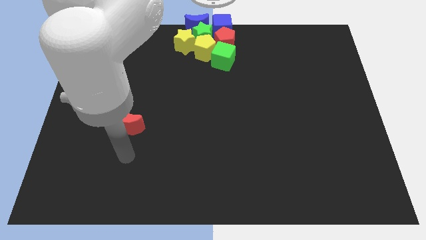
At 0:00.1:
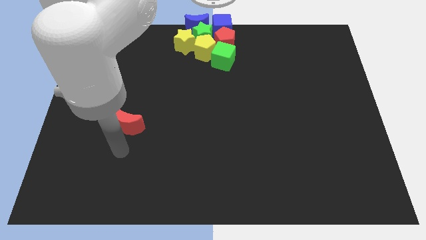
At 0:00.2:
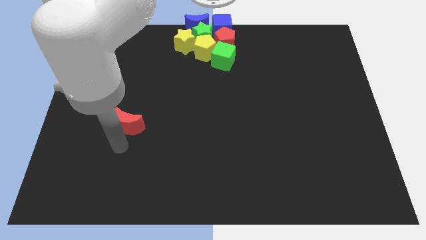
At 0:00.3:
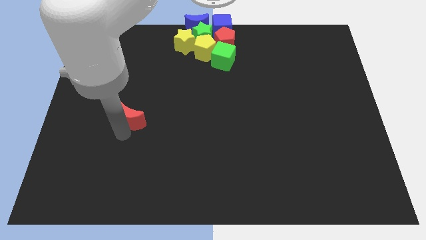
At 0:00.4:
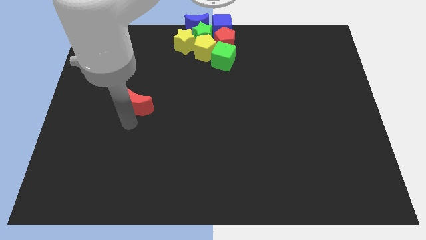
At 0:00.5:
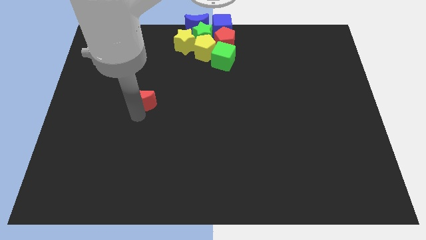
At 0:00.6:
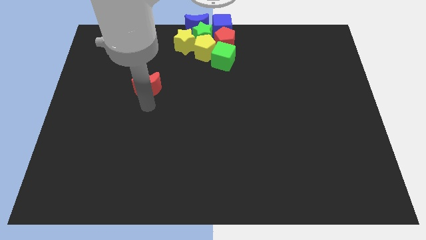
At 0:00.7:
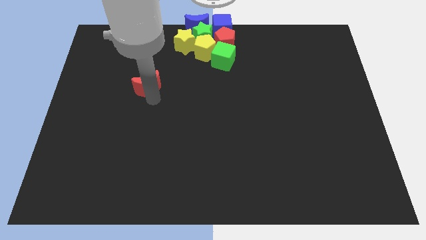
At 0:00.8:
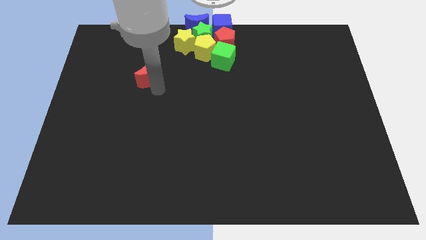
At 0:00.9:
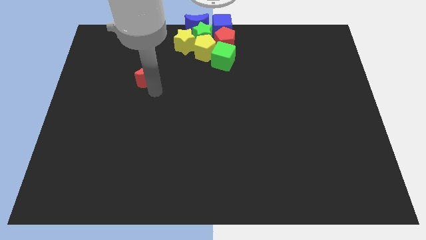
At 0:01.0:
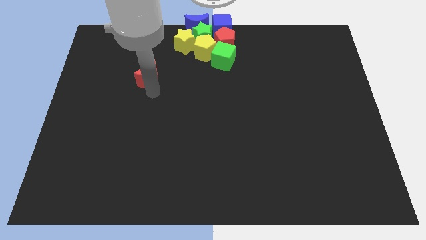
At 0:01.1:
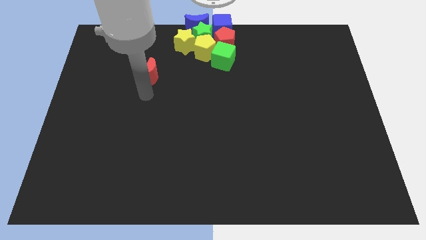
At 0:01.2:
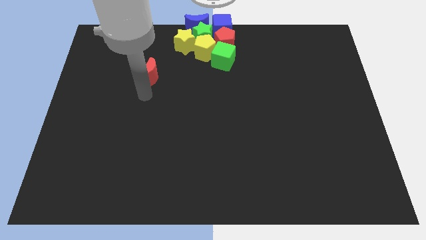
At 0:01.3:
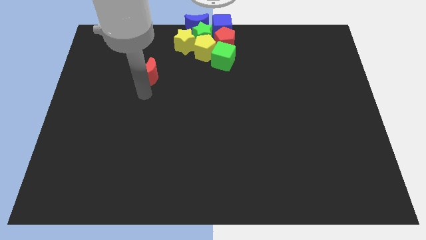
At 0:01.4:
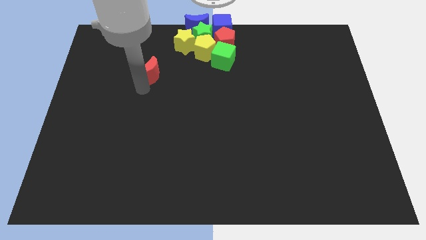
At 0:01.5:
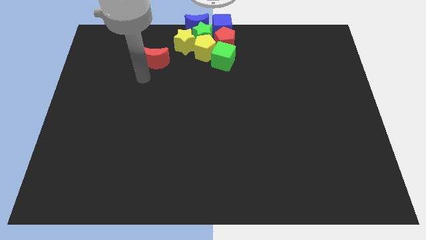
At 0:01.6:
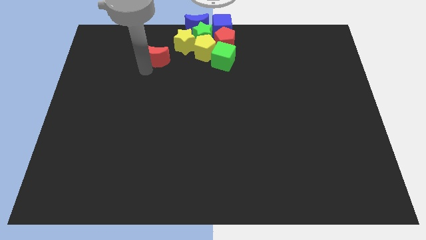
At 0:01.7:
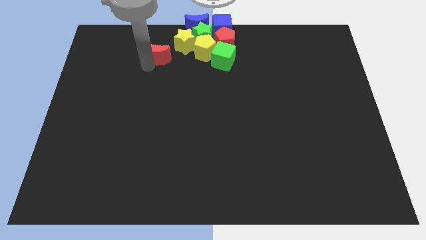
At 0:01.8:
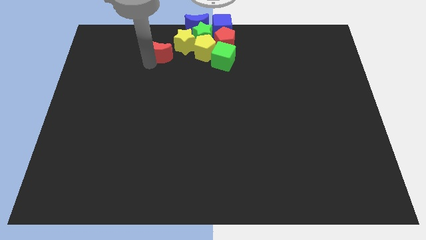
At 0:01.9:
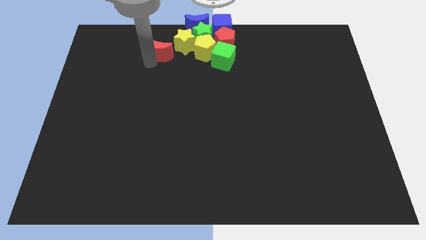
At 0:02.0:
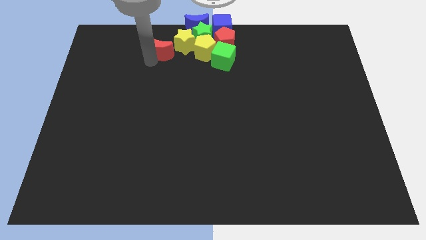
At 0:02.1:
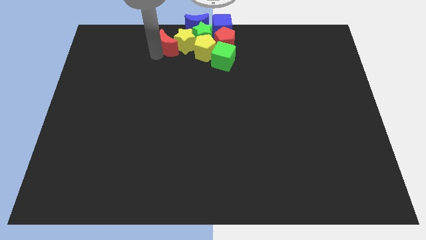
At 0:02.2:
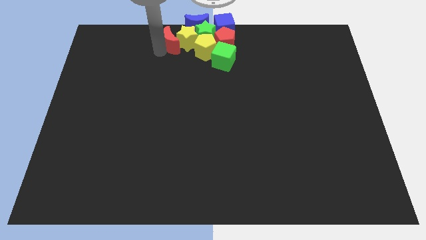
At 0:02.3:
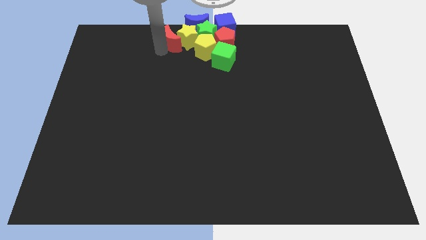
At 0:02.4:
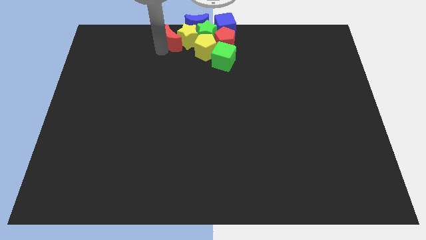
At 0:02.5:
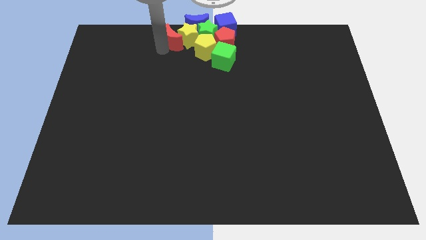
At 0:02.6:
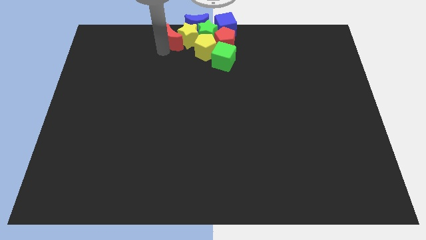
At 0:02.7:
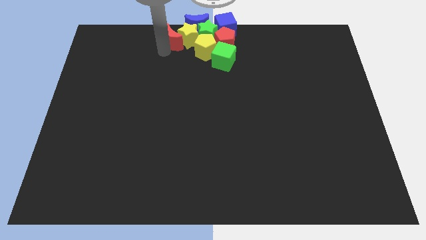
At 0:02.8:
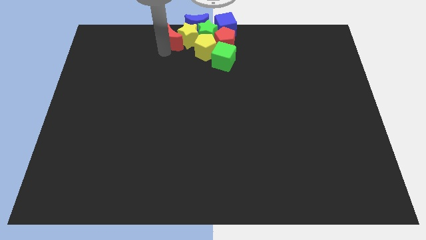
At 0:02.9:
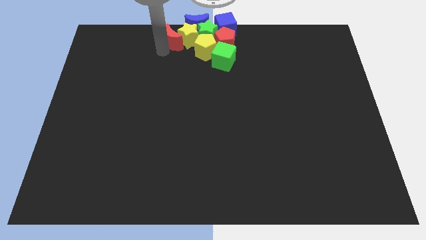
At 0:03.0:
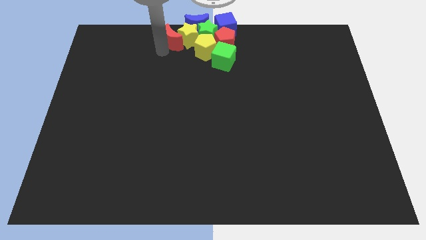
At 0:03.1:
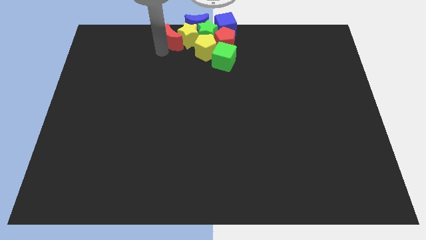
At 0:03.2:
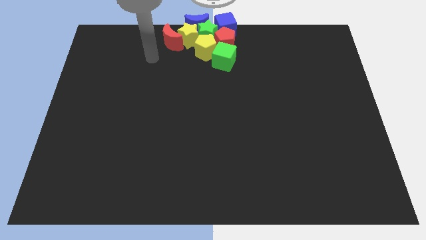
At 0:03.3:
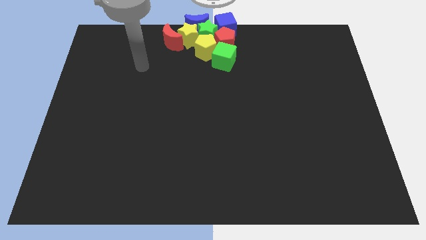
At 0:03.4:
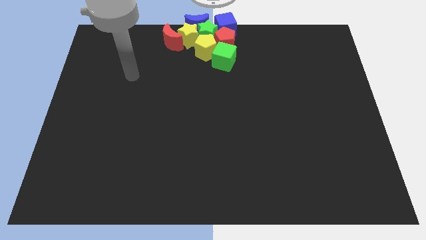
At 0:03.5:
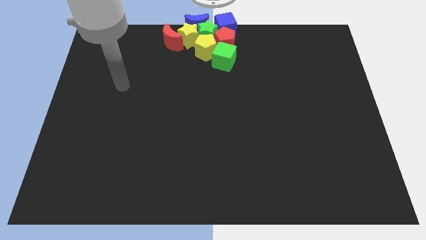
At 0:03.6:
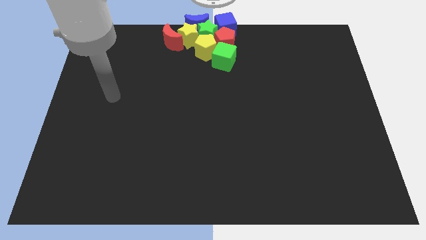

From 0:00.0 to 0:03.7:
slide the red moon into the left side of the yellow star

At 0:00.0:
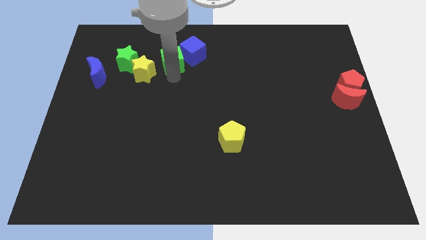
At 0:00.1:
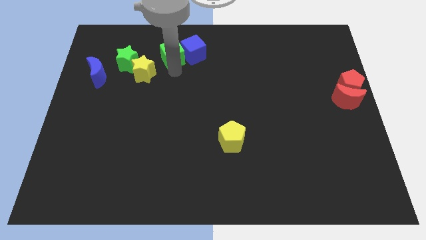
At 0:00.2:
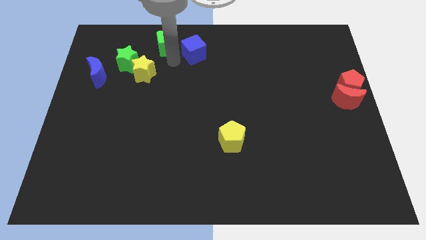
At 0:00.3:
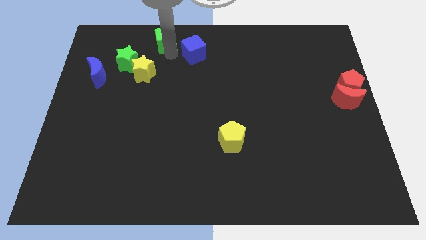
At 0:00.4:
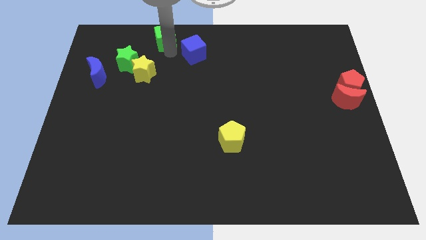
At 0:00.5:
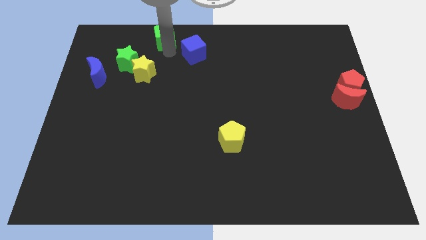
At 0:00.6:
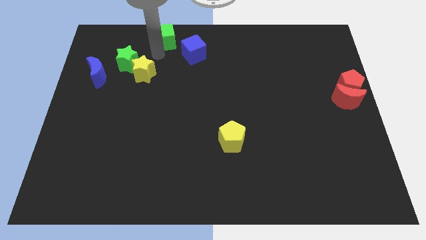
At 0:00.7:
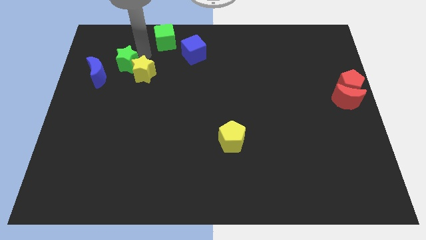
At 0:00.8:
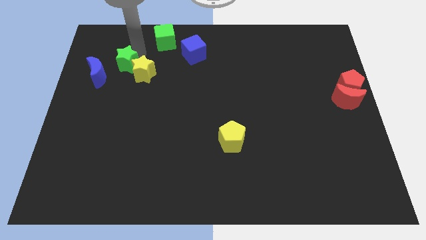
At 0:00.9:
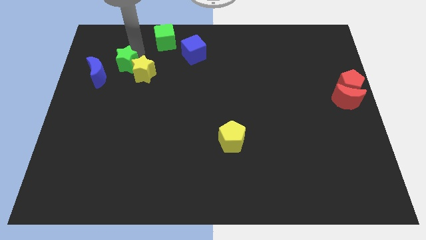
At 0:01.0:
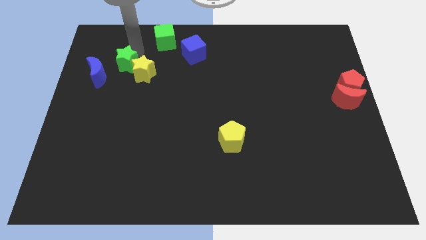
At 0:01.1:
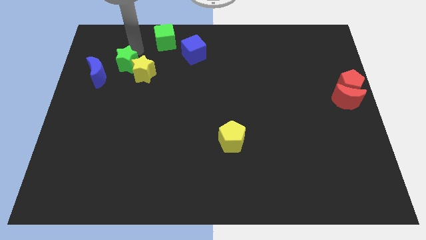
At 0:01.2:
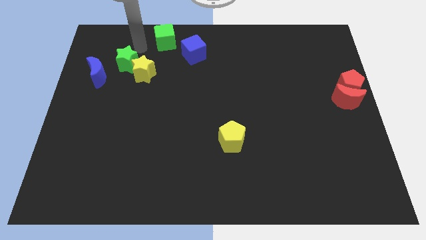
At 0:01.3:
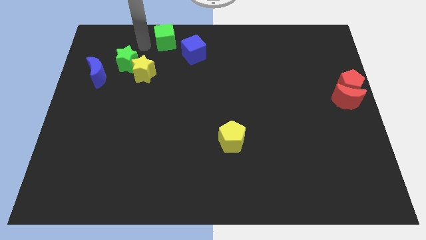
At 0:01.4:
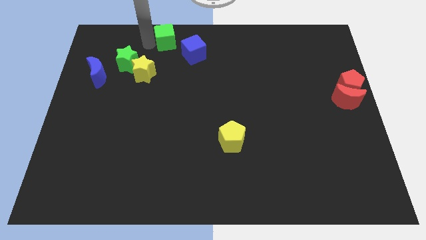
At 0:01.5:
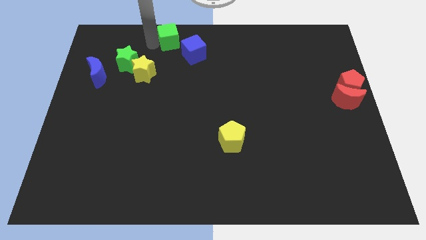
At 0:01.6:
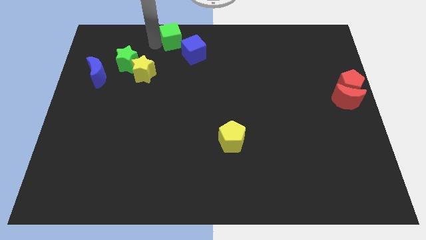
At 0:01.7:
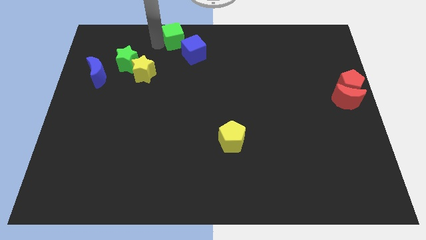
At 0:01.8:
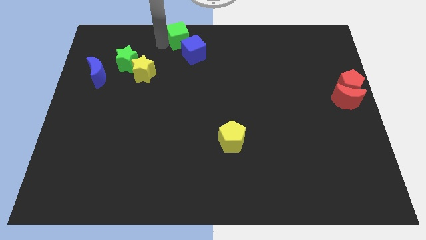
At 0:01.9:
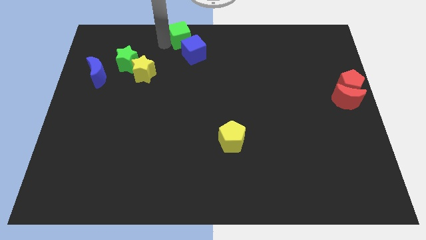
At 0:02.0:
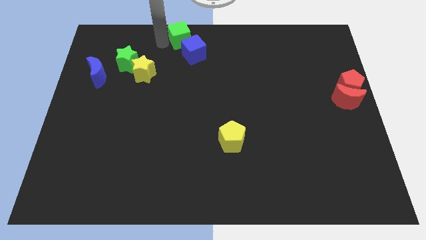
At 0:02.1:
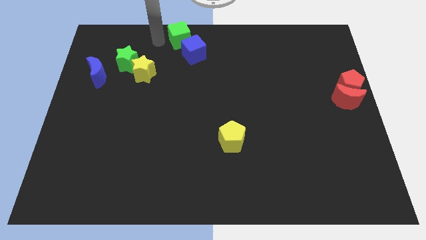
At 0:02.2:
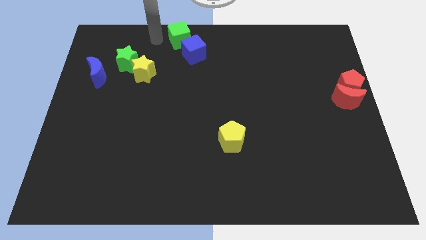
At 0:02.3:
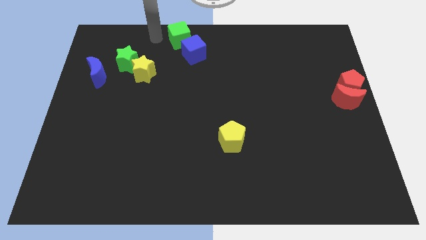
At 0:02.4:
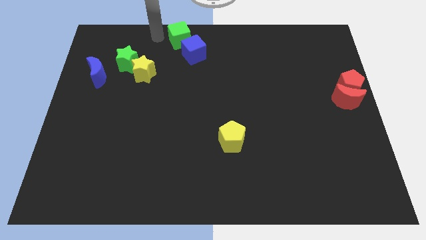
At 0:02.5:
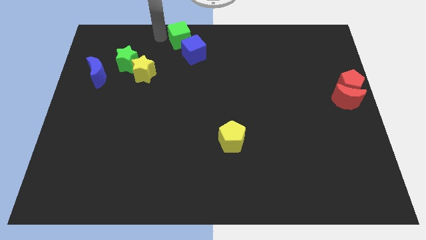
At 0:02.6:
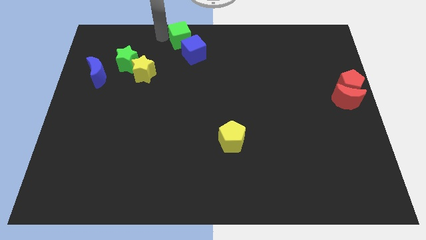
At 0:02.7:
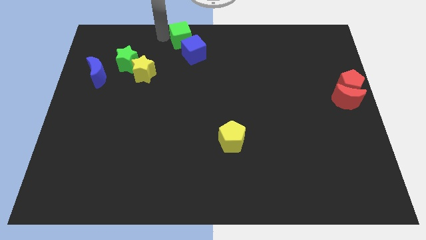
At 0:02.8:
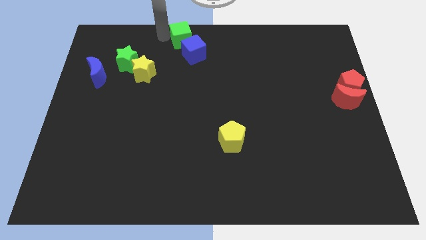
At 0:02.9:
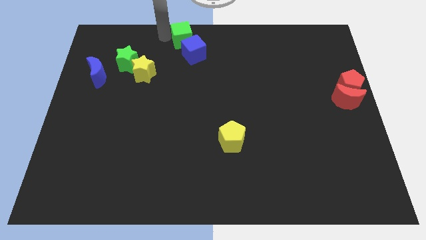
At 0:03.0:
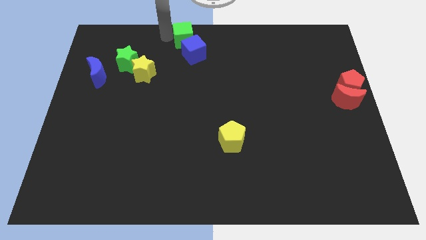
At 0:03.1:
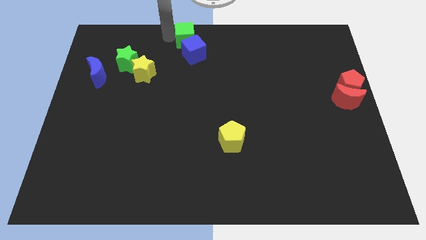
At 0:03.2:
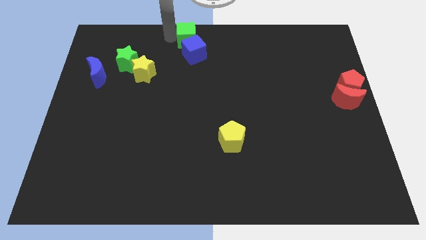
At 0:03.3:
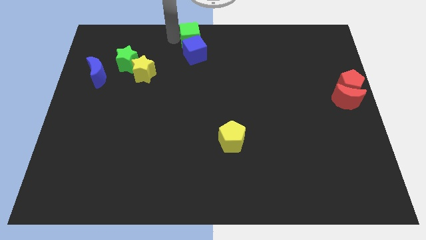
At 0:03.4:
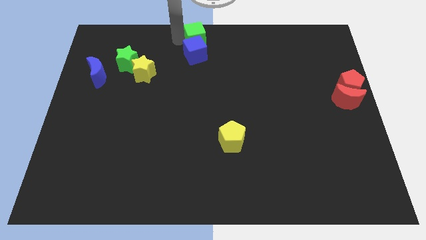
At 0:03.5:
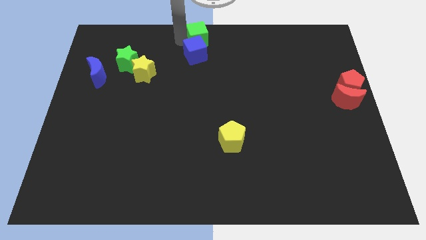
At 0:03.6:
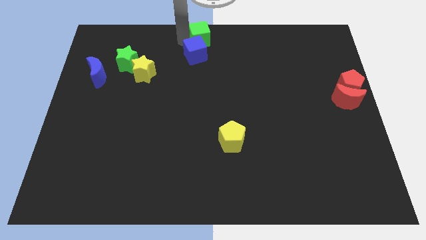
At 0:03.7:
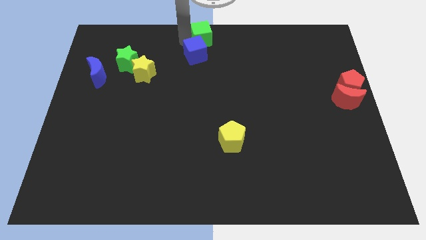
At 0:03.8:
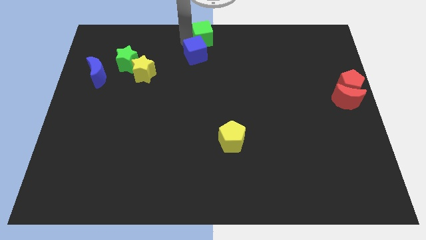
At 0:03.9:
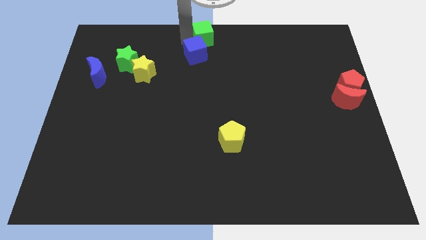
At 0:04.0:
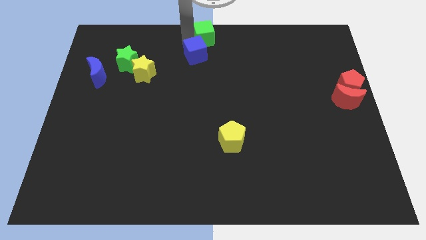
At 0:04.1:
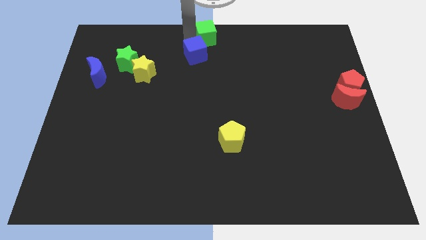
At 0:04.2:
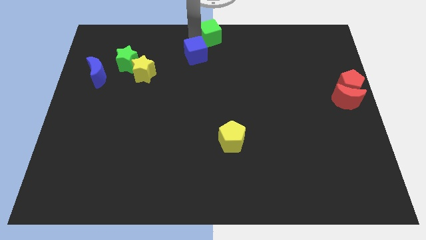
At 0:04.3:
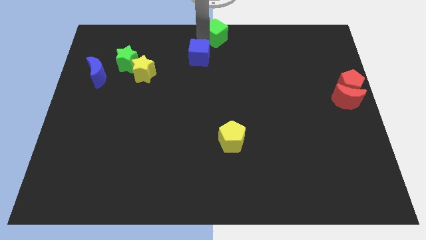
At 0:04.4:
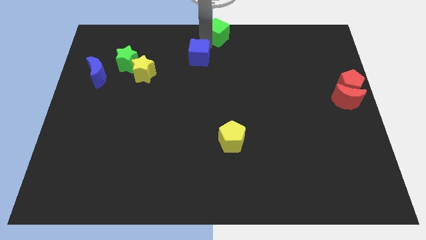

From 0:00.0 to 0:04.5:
place the green cube at the top center of the board

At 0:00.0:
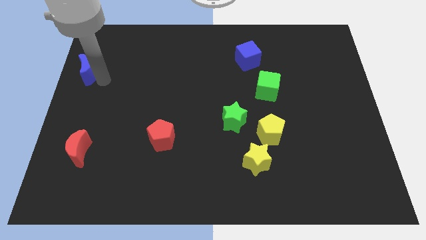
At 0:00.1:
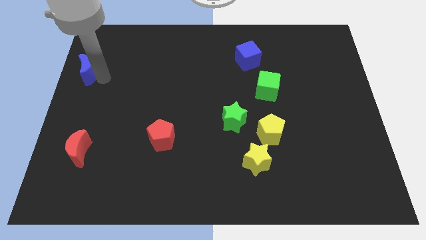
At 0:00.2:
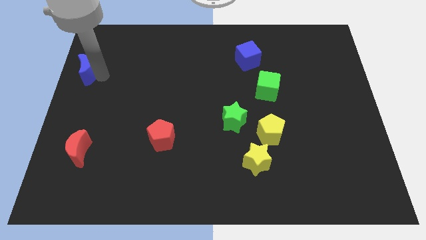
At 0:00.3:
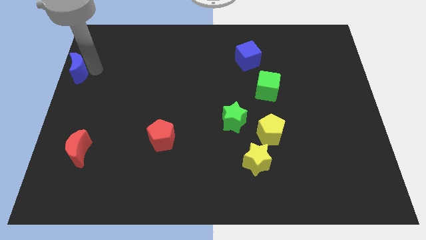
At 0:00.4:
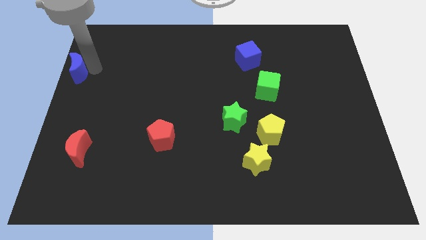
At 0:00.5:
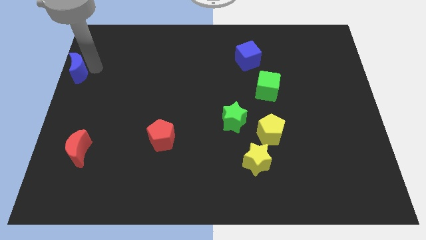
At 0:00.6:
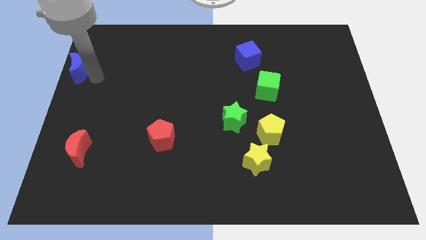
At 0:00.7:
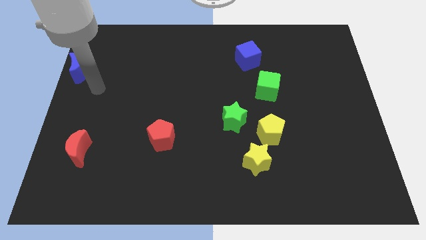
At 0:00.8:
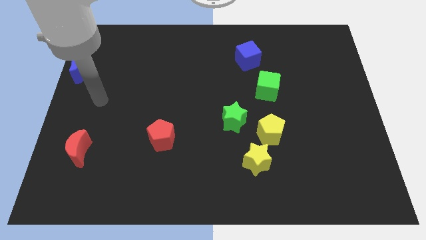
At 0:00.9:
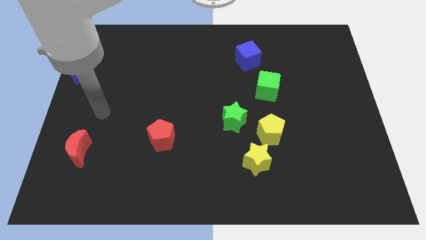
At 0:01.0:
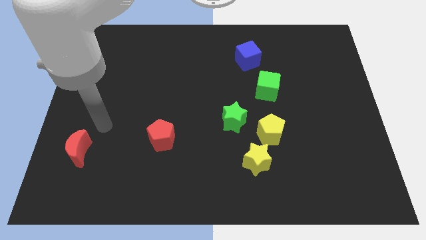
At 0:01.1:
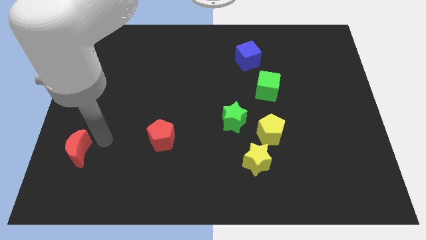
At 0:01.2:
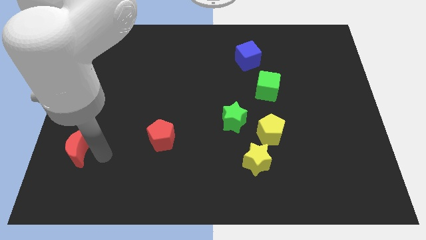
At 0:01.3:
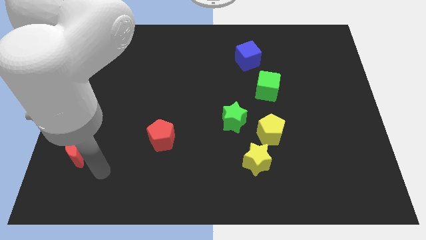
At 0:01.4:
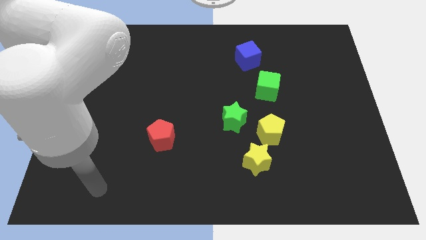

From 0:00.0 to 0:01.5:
move yourself away from the blue moon
